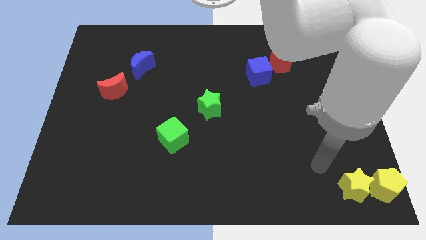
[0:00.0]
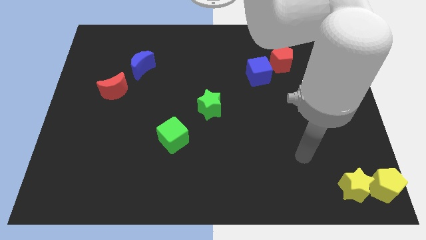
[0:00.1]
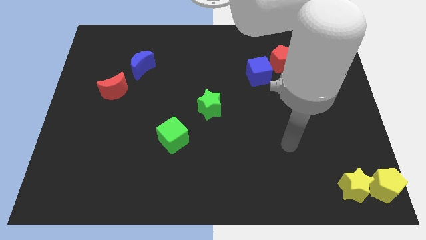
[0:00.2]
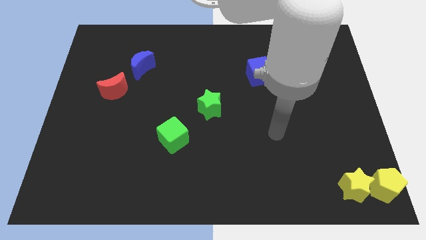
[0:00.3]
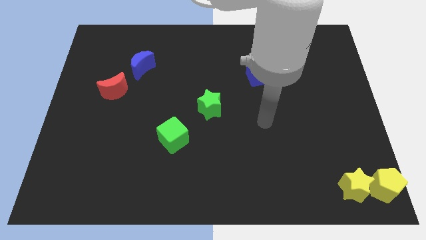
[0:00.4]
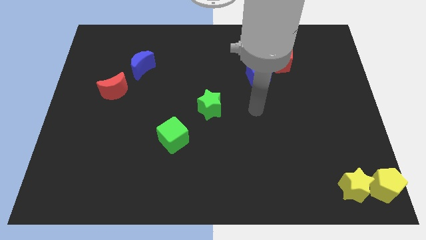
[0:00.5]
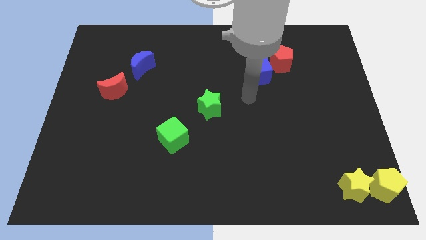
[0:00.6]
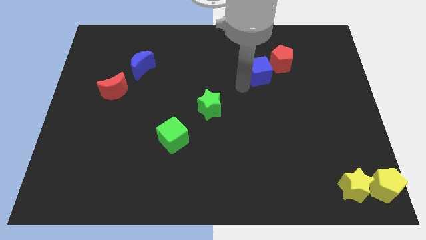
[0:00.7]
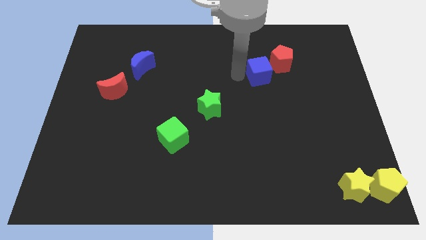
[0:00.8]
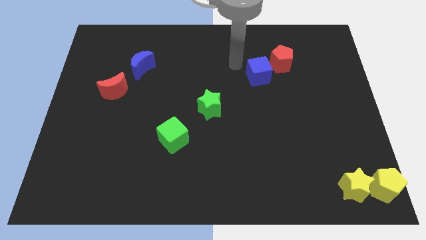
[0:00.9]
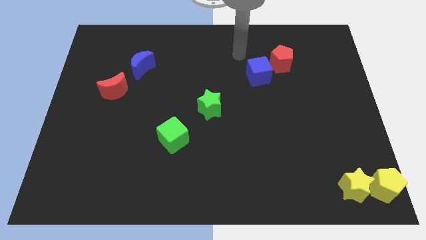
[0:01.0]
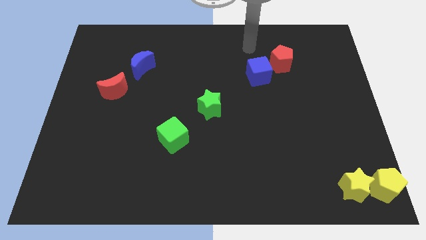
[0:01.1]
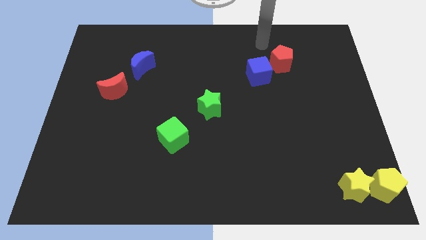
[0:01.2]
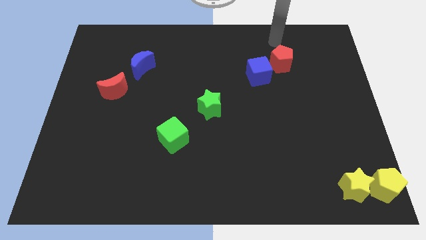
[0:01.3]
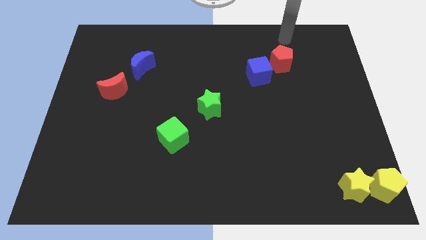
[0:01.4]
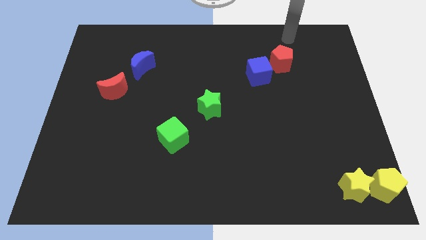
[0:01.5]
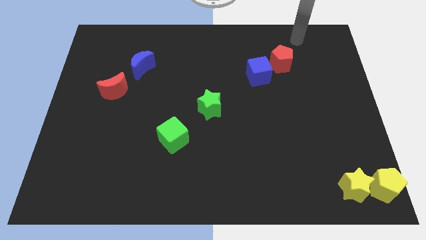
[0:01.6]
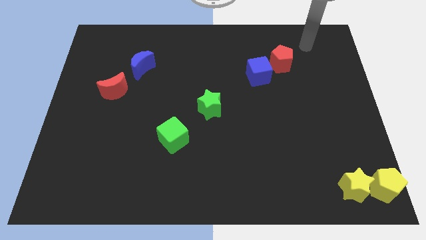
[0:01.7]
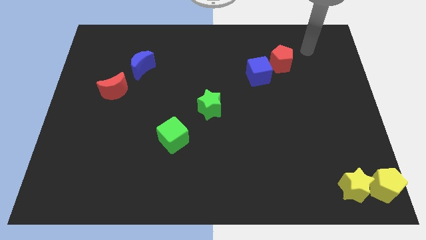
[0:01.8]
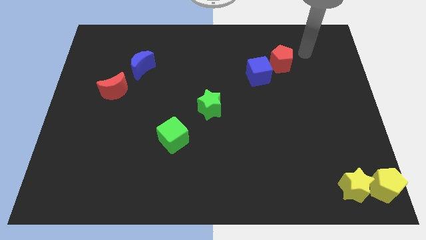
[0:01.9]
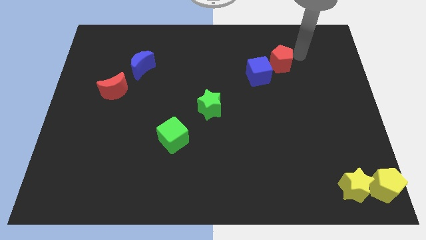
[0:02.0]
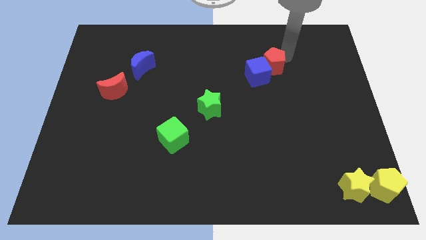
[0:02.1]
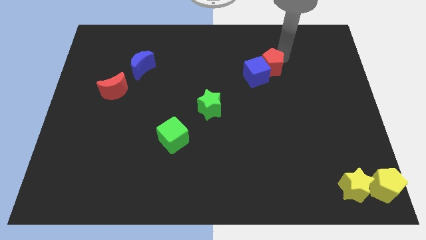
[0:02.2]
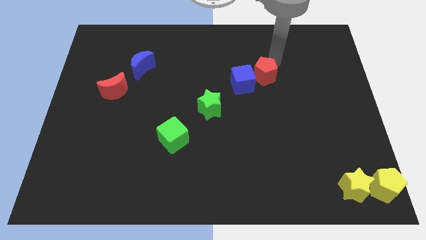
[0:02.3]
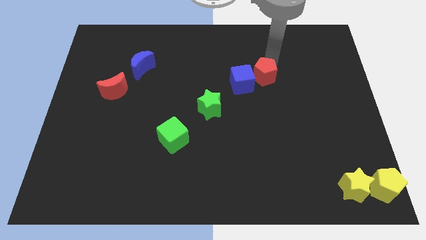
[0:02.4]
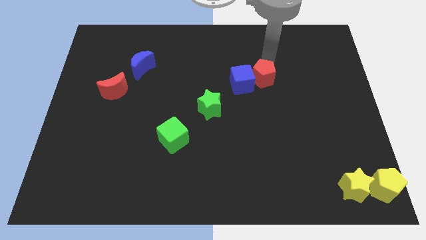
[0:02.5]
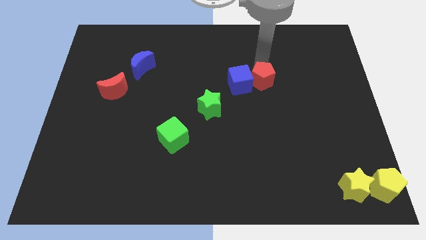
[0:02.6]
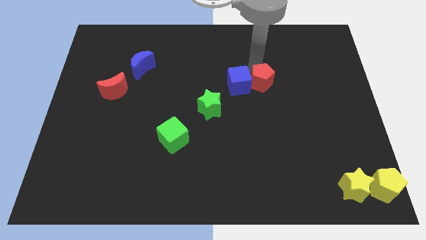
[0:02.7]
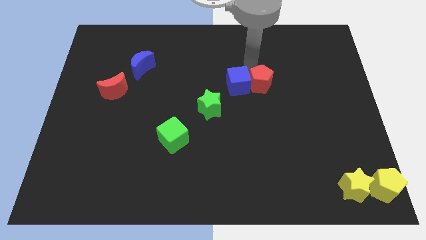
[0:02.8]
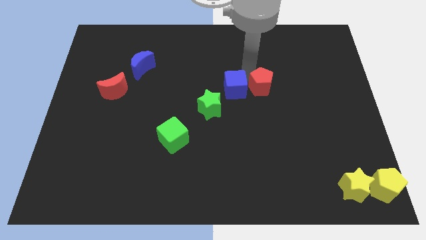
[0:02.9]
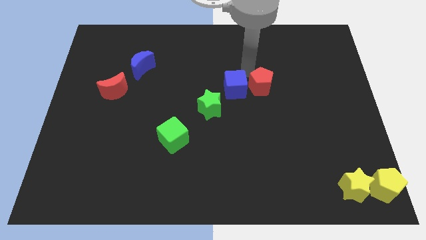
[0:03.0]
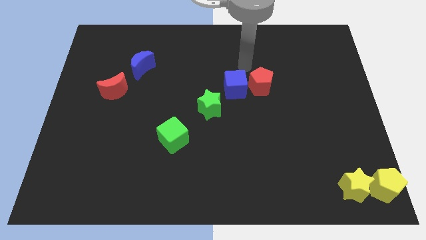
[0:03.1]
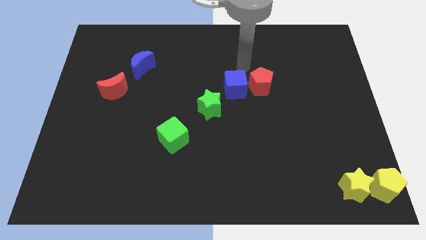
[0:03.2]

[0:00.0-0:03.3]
push the red pentagon to the right of the blue cube

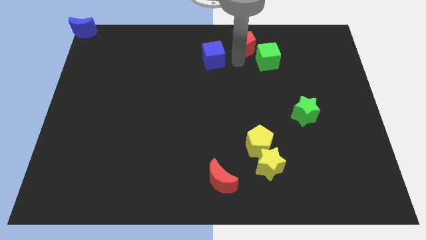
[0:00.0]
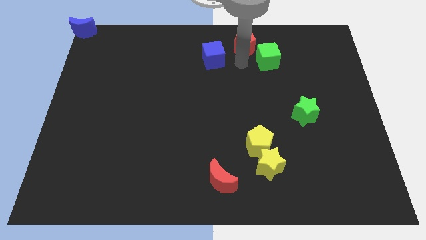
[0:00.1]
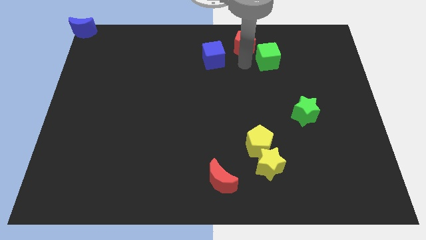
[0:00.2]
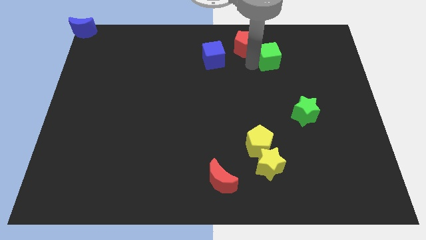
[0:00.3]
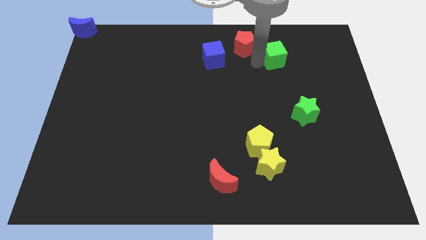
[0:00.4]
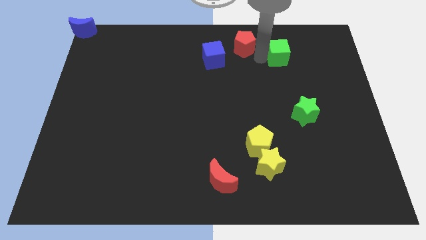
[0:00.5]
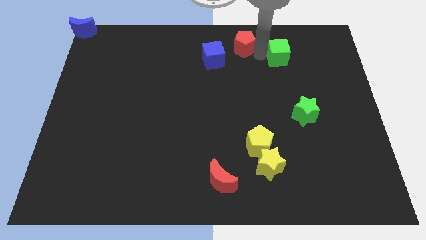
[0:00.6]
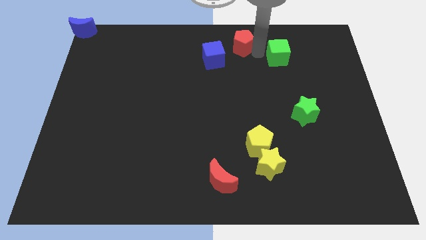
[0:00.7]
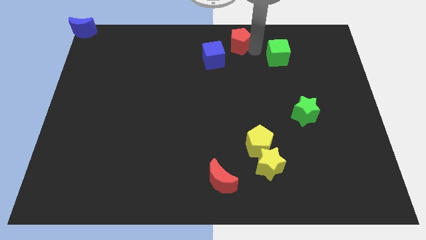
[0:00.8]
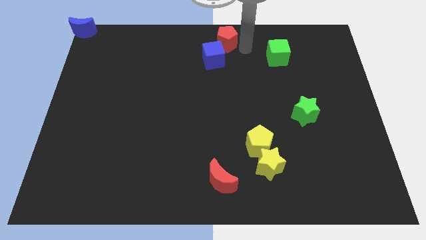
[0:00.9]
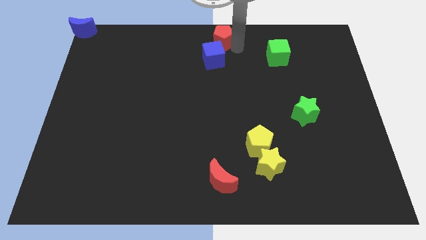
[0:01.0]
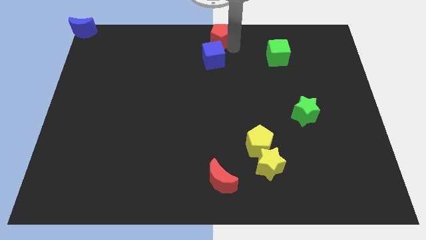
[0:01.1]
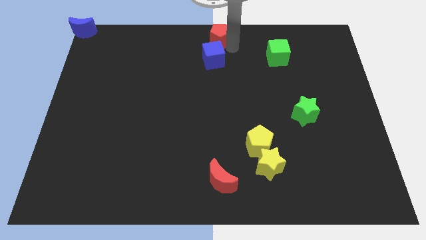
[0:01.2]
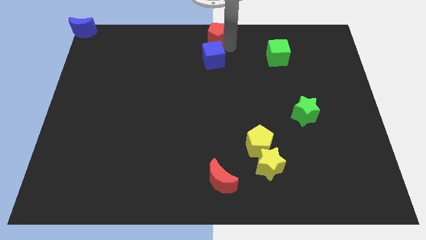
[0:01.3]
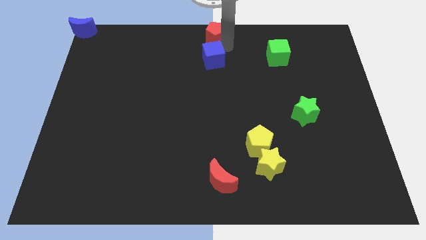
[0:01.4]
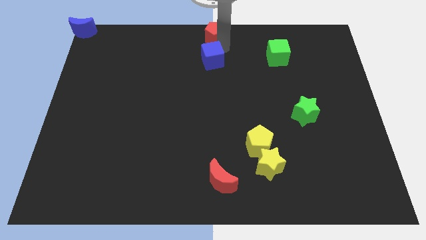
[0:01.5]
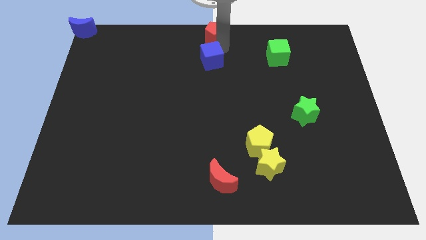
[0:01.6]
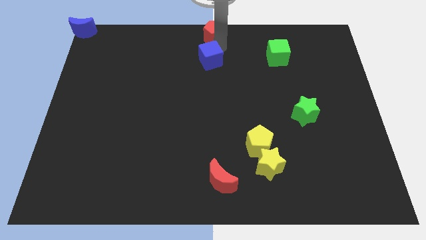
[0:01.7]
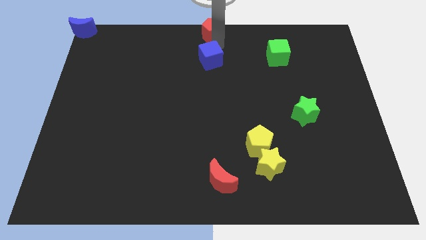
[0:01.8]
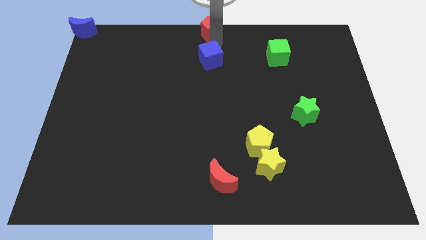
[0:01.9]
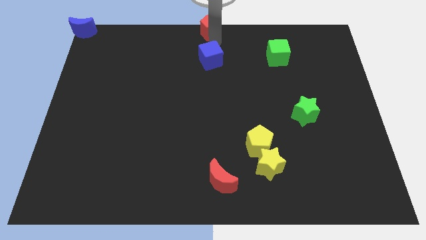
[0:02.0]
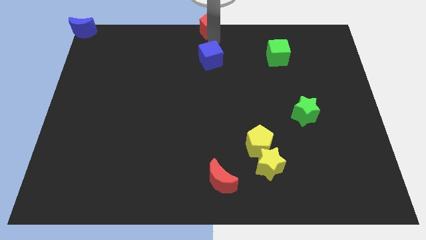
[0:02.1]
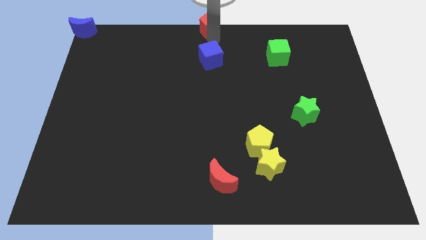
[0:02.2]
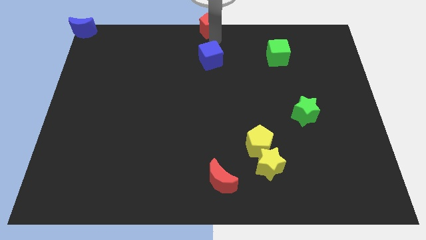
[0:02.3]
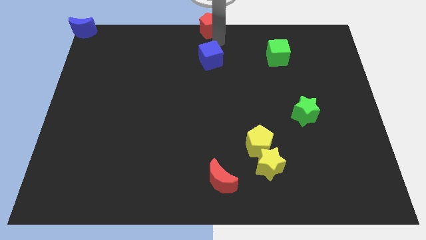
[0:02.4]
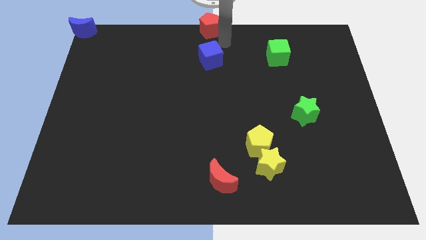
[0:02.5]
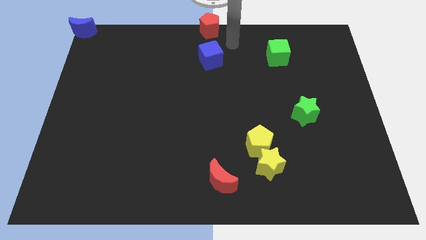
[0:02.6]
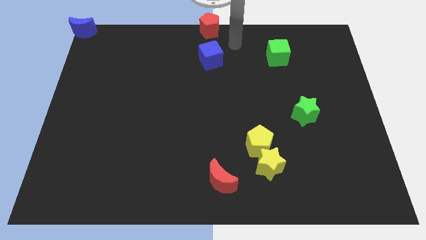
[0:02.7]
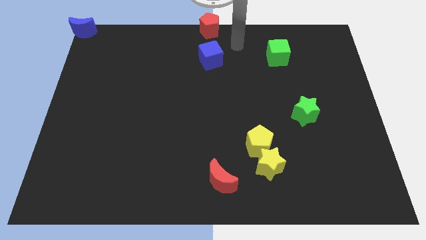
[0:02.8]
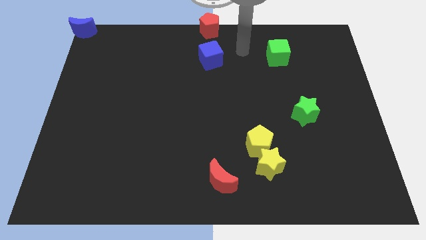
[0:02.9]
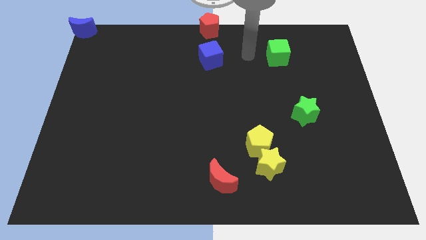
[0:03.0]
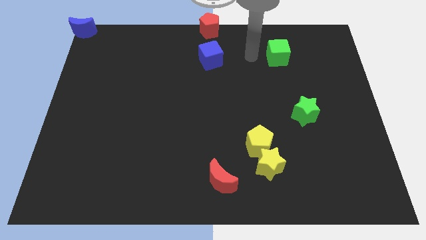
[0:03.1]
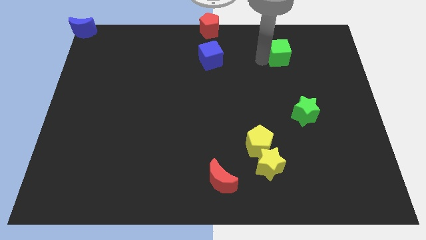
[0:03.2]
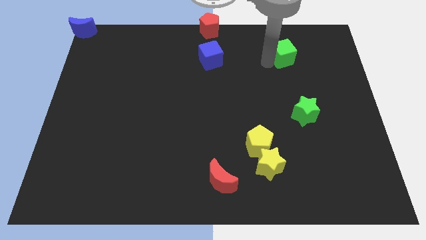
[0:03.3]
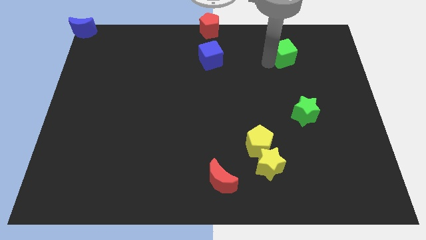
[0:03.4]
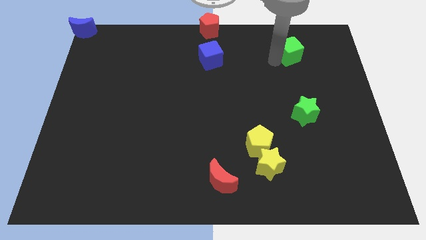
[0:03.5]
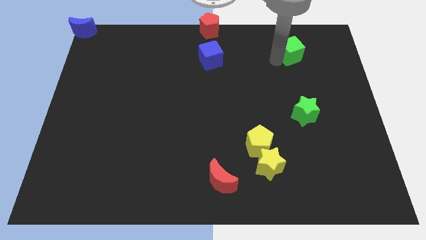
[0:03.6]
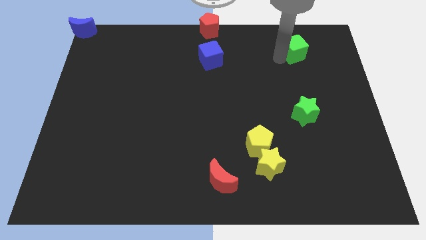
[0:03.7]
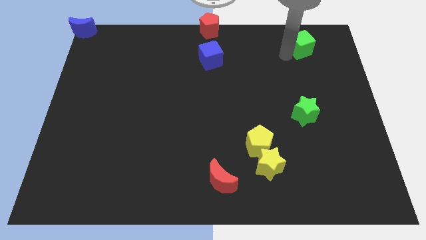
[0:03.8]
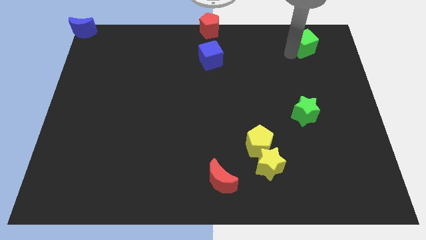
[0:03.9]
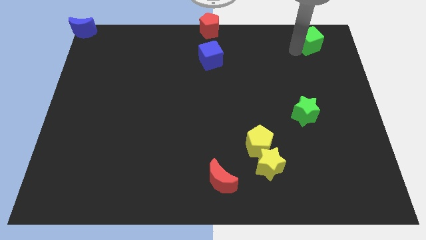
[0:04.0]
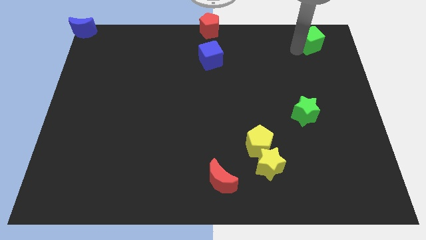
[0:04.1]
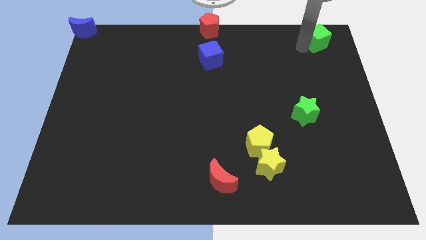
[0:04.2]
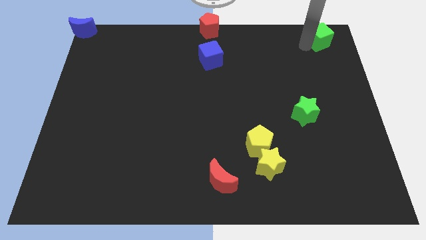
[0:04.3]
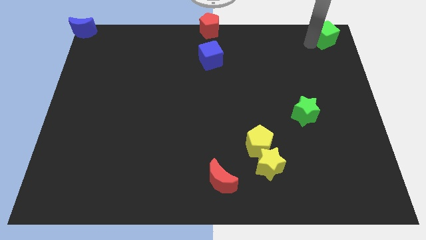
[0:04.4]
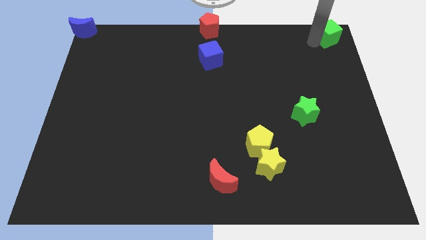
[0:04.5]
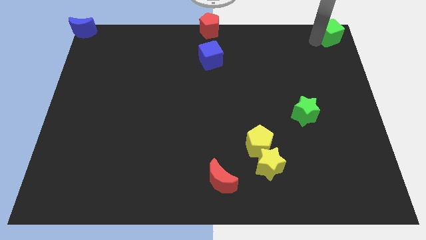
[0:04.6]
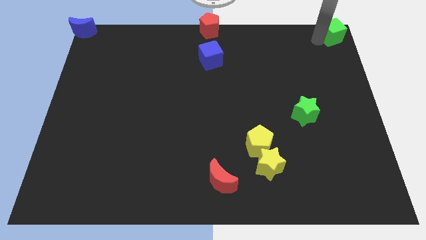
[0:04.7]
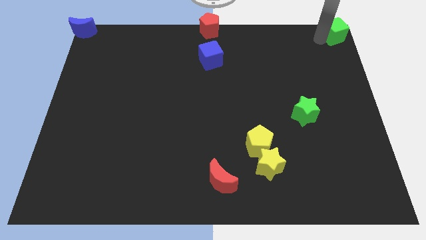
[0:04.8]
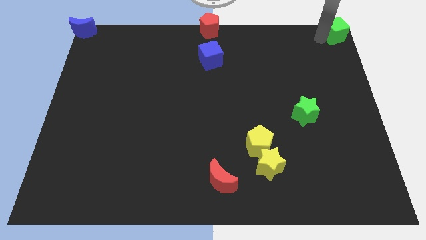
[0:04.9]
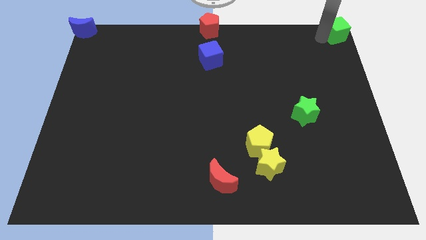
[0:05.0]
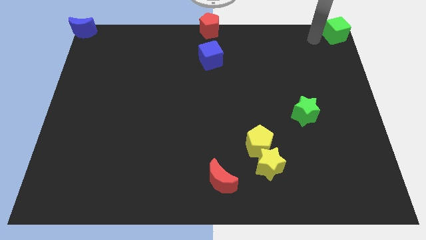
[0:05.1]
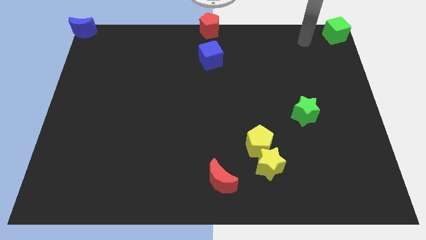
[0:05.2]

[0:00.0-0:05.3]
move the green cube to the top right side

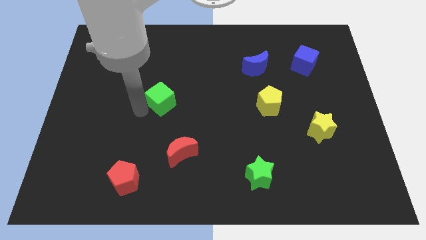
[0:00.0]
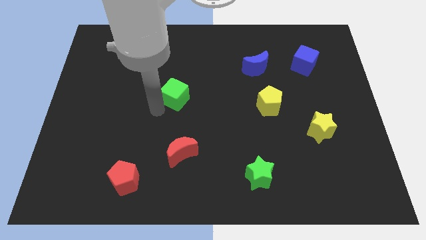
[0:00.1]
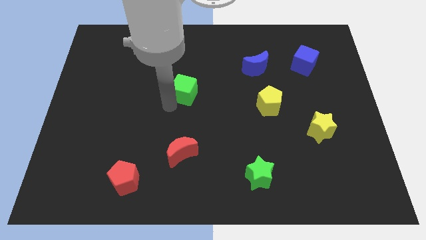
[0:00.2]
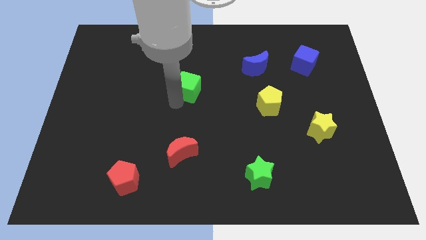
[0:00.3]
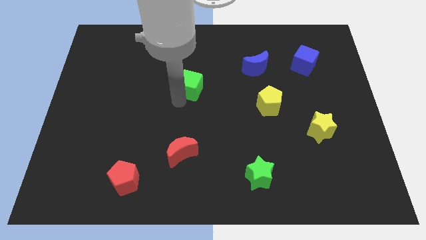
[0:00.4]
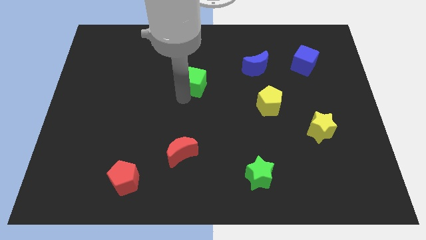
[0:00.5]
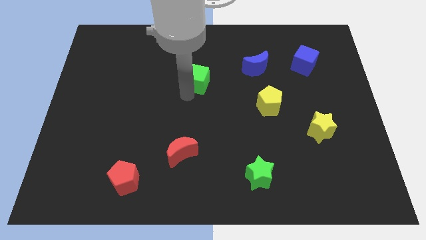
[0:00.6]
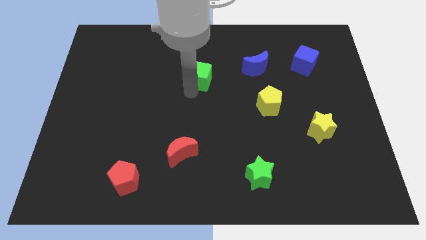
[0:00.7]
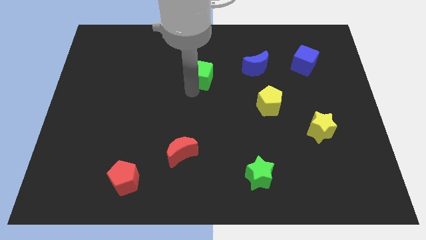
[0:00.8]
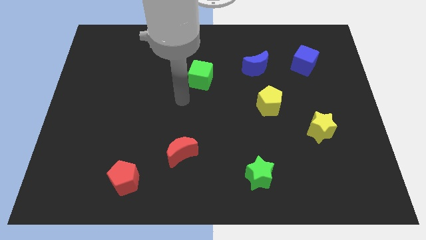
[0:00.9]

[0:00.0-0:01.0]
place the green cube left to the blue crescent
